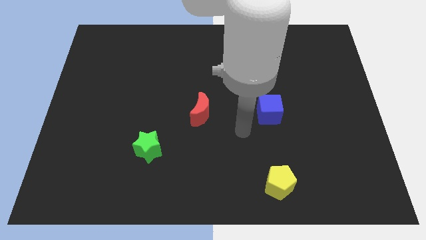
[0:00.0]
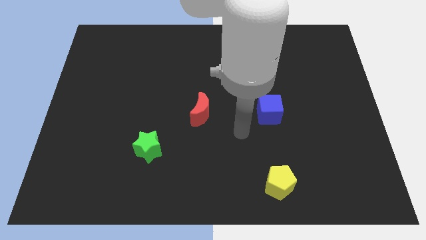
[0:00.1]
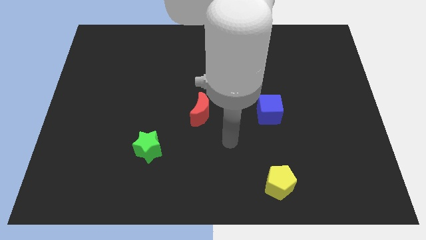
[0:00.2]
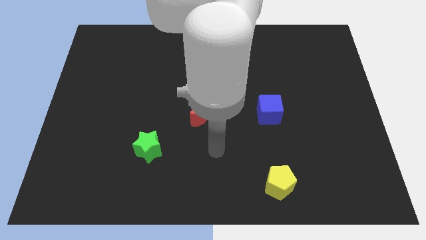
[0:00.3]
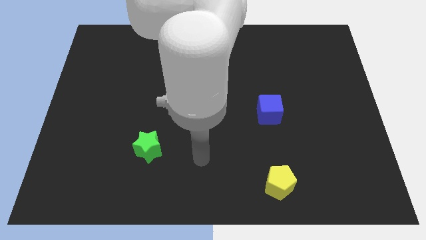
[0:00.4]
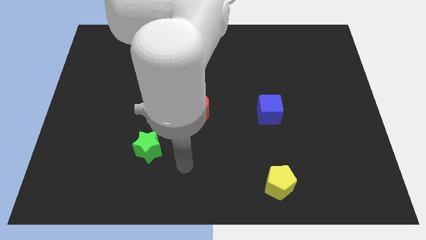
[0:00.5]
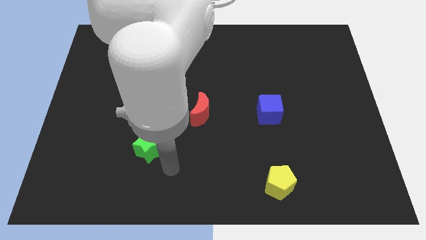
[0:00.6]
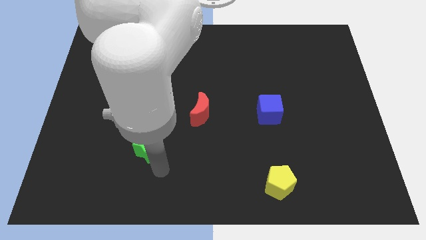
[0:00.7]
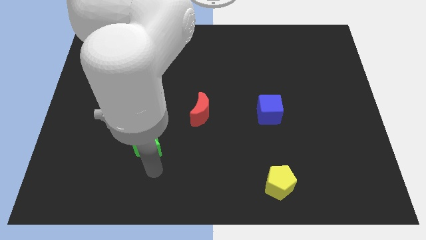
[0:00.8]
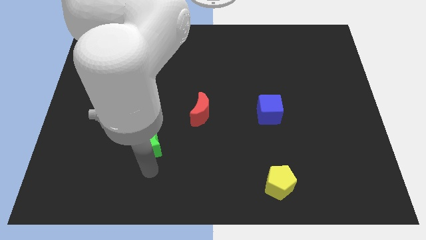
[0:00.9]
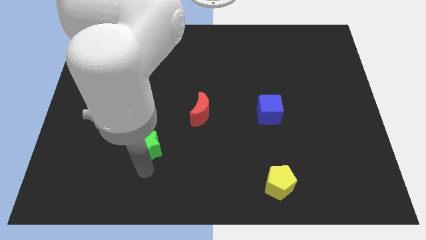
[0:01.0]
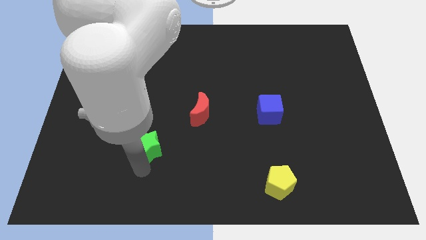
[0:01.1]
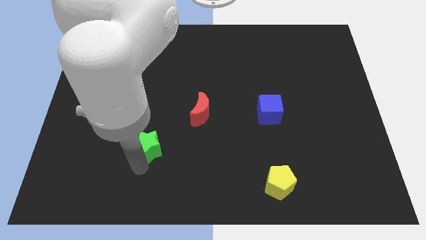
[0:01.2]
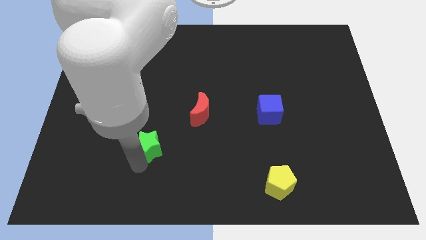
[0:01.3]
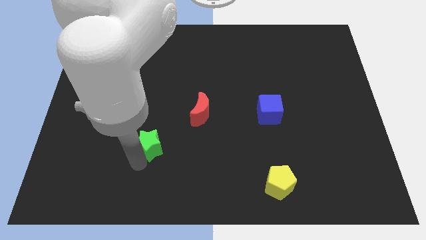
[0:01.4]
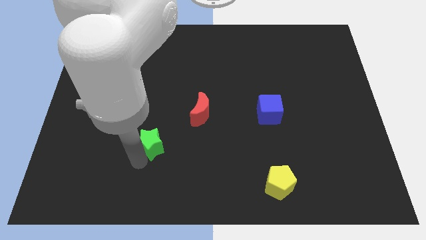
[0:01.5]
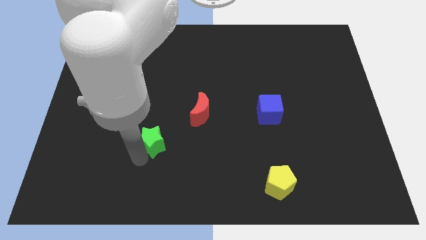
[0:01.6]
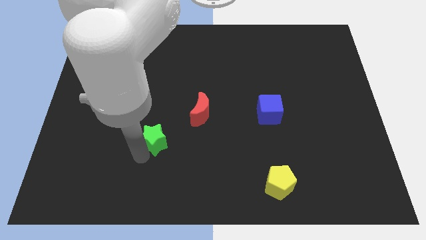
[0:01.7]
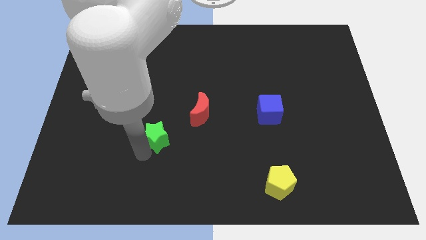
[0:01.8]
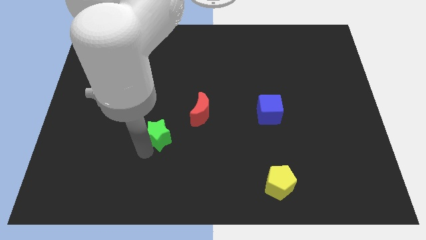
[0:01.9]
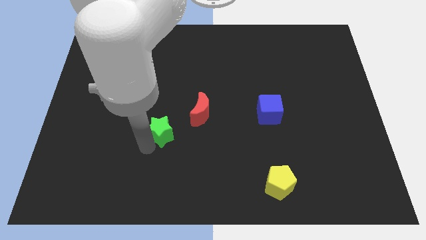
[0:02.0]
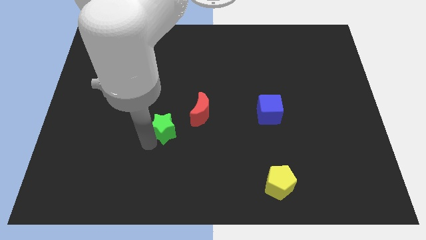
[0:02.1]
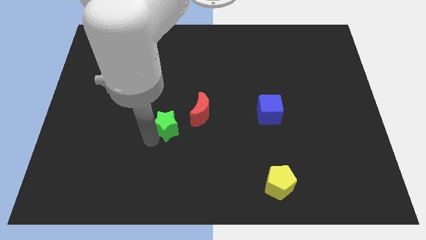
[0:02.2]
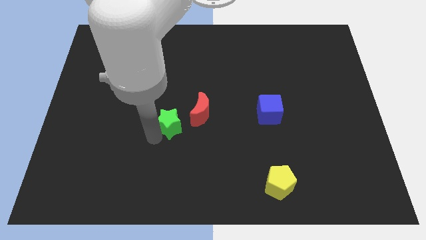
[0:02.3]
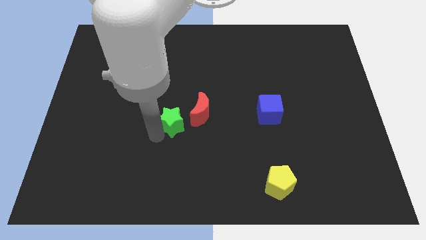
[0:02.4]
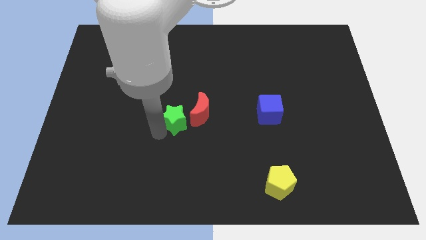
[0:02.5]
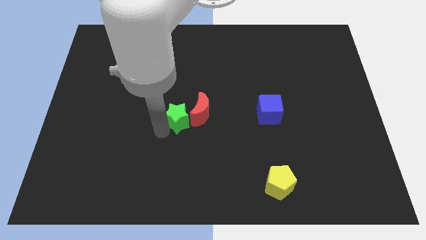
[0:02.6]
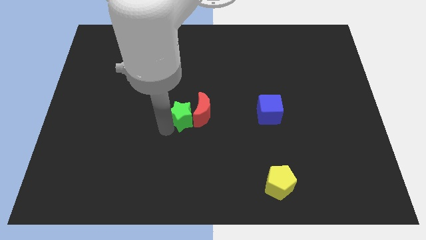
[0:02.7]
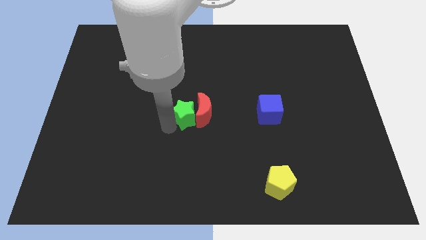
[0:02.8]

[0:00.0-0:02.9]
push the green star towards the moon

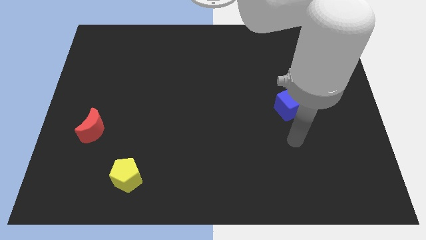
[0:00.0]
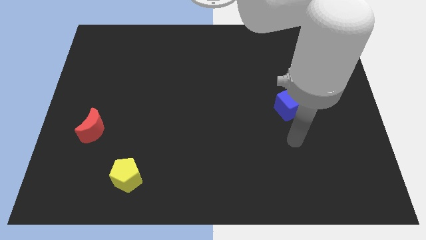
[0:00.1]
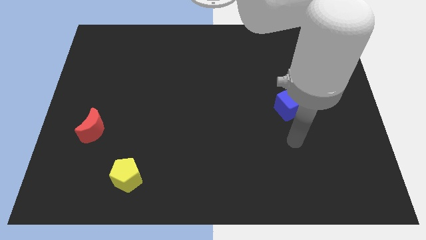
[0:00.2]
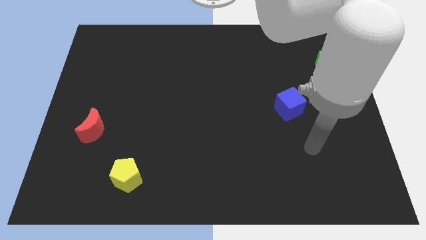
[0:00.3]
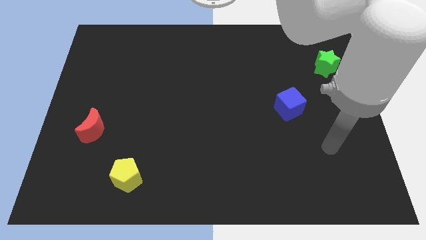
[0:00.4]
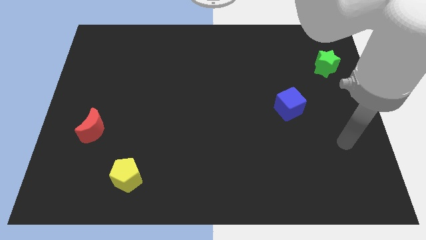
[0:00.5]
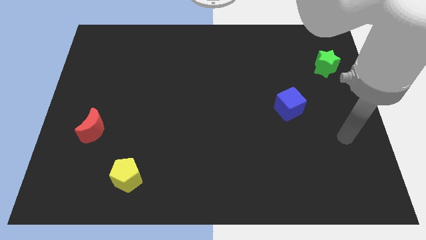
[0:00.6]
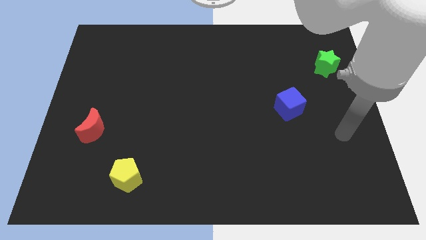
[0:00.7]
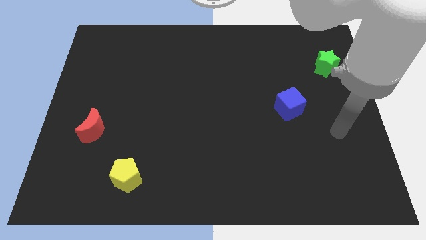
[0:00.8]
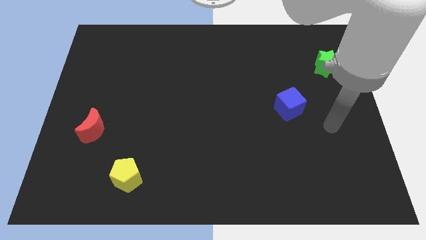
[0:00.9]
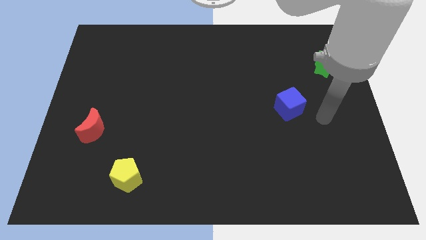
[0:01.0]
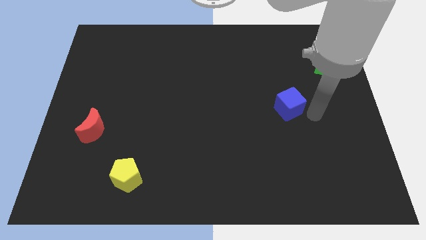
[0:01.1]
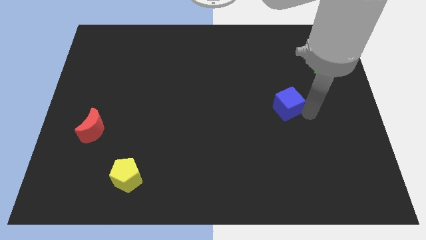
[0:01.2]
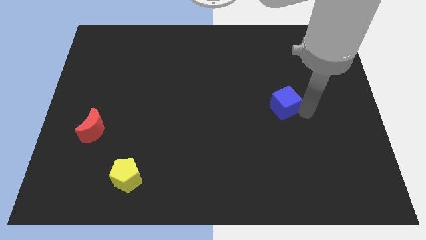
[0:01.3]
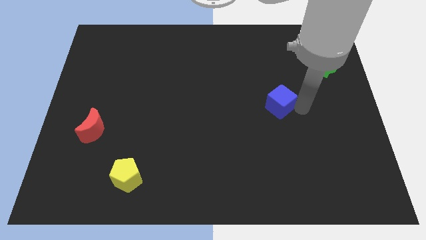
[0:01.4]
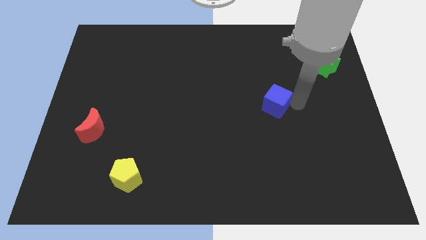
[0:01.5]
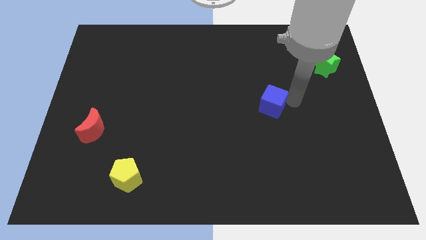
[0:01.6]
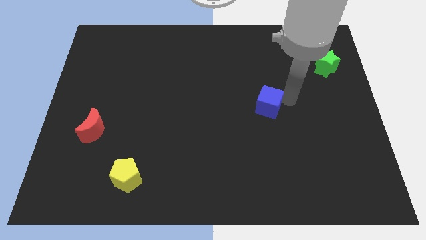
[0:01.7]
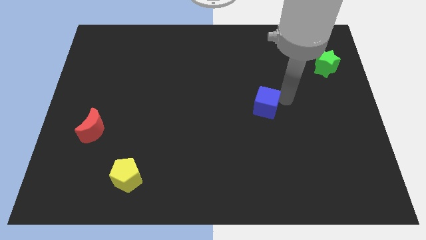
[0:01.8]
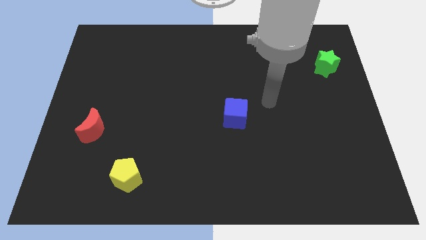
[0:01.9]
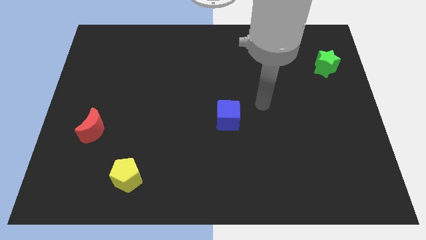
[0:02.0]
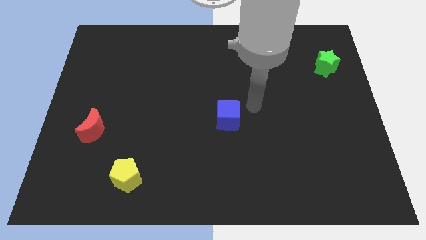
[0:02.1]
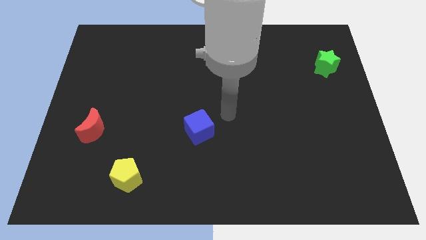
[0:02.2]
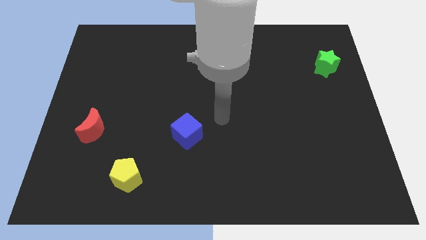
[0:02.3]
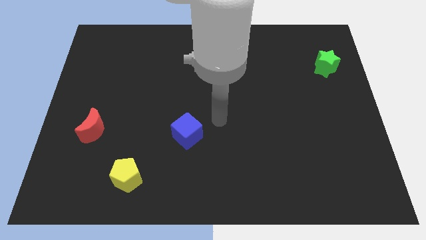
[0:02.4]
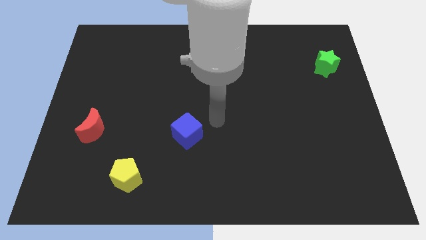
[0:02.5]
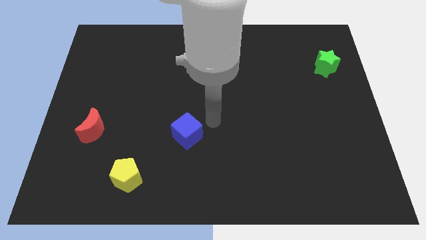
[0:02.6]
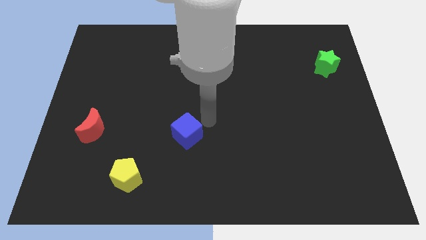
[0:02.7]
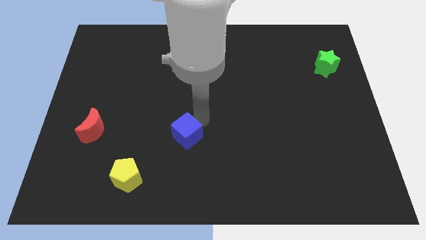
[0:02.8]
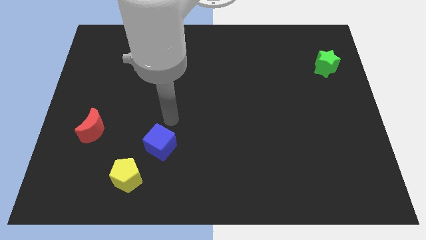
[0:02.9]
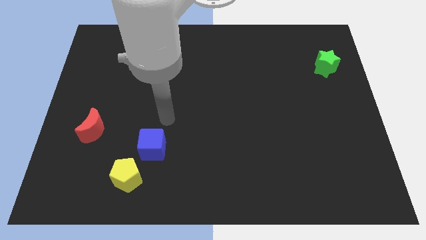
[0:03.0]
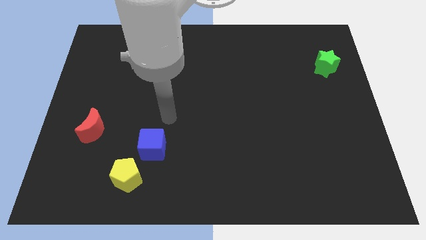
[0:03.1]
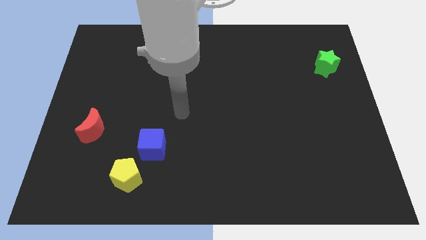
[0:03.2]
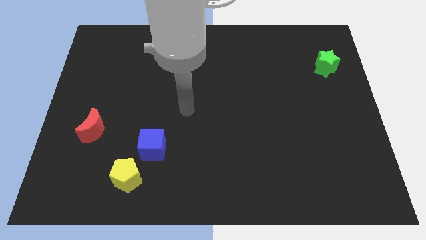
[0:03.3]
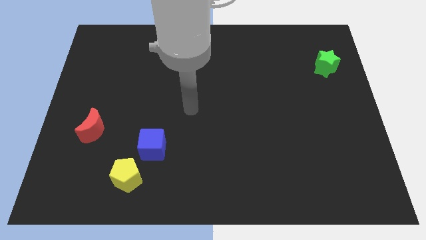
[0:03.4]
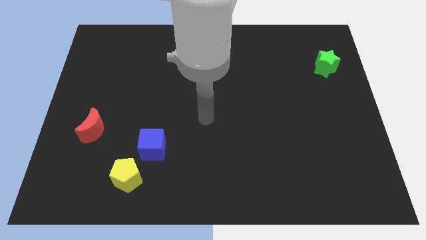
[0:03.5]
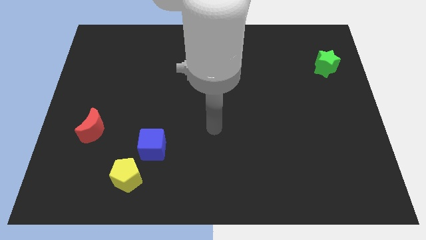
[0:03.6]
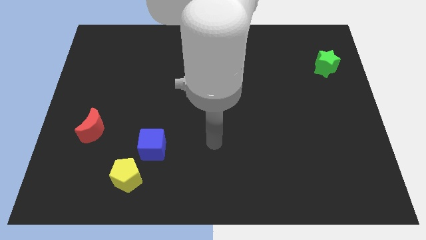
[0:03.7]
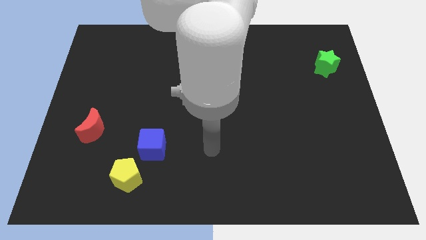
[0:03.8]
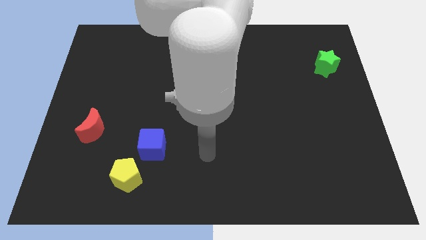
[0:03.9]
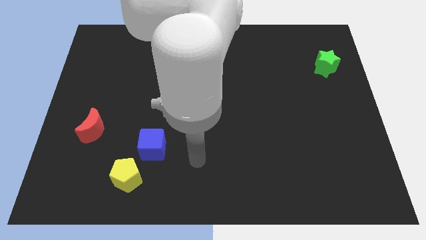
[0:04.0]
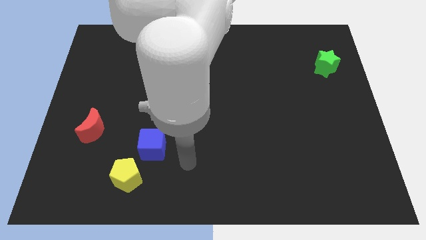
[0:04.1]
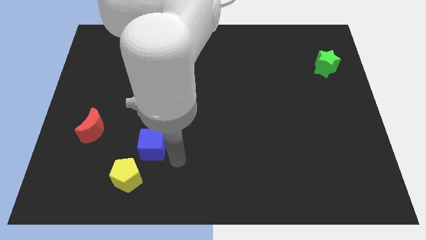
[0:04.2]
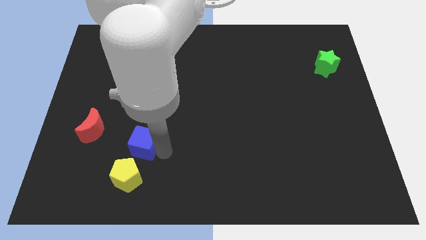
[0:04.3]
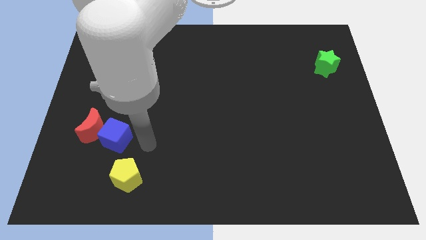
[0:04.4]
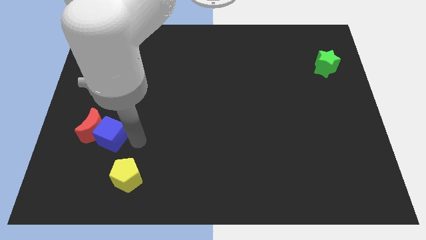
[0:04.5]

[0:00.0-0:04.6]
put the blue cube to the moon

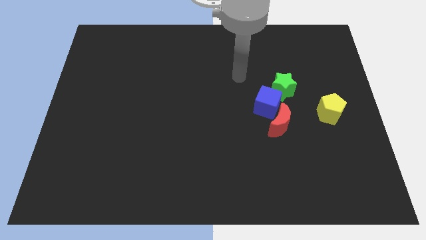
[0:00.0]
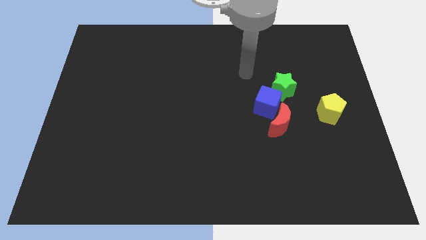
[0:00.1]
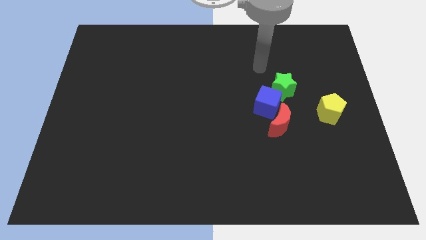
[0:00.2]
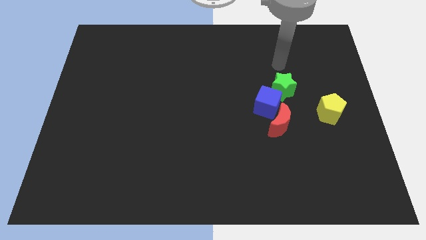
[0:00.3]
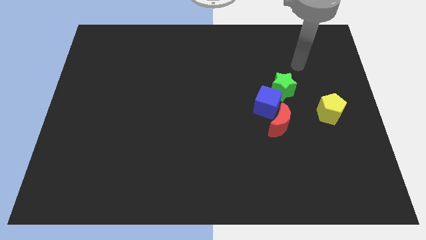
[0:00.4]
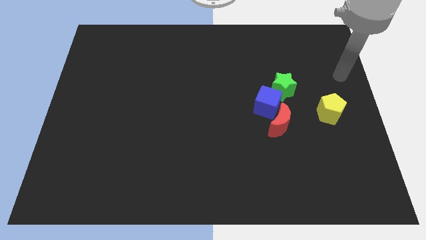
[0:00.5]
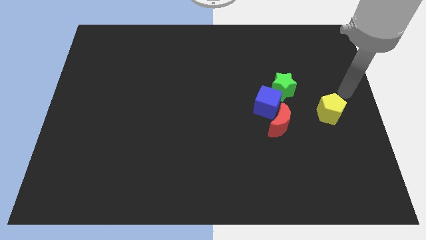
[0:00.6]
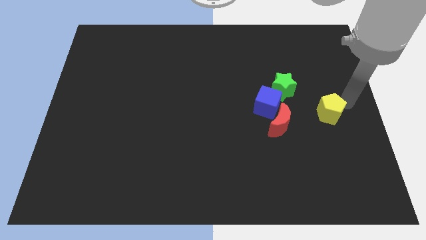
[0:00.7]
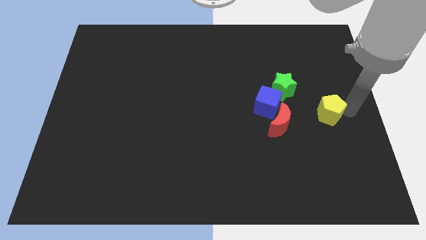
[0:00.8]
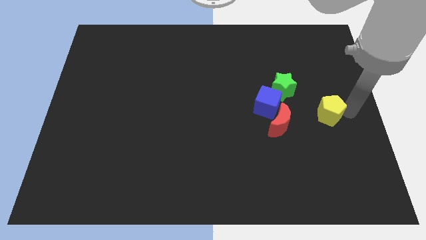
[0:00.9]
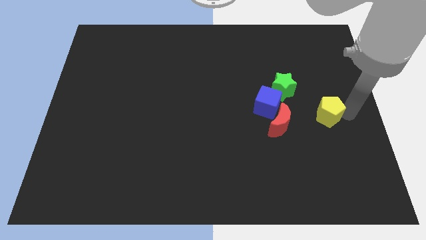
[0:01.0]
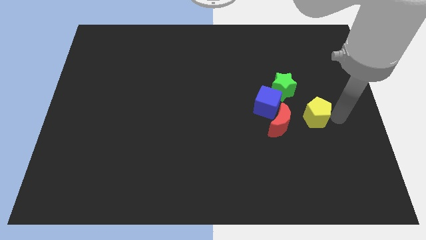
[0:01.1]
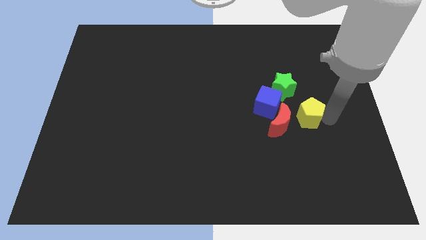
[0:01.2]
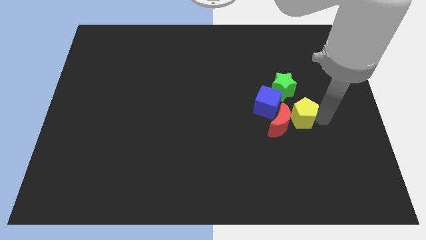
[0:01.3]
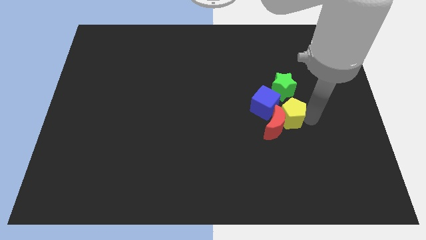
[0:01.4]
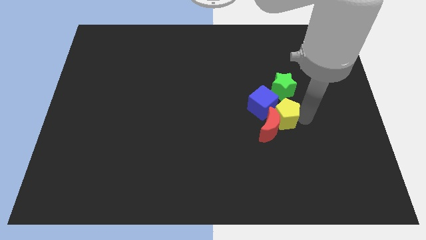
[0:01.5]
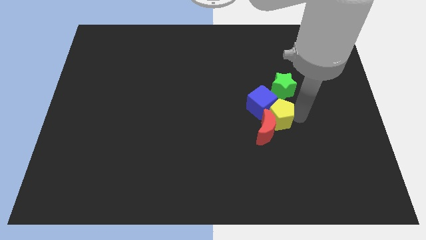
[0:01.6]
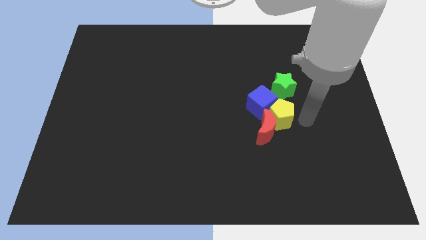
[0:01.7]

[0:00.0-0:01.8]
put the yellow block towards the blue cube
